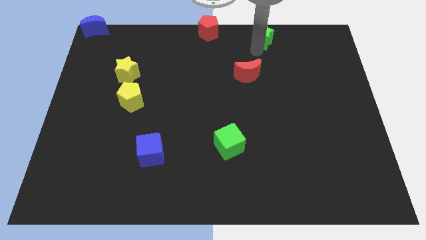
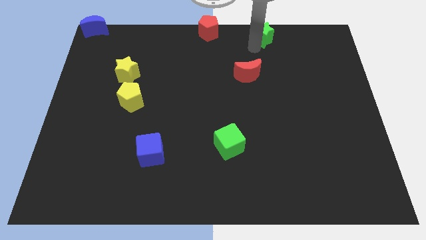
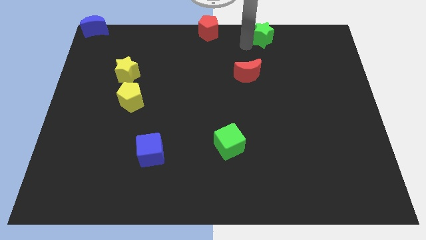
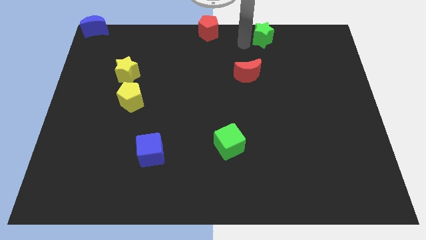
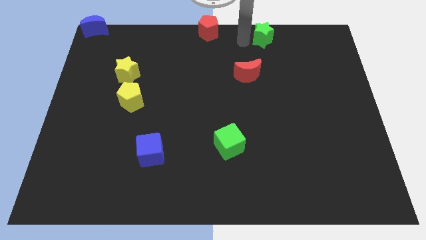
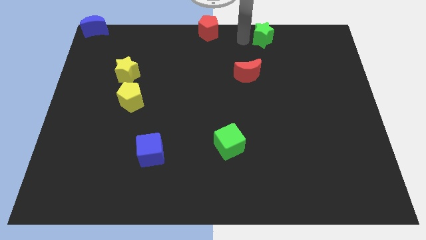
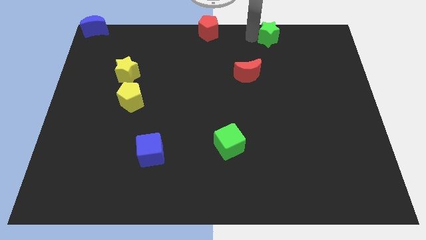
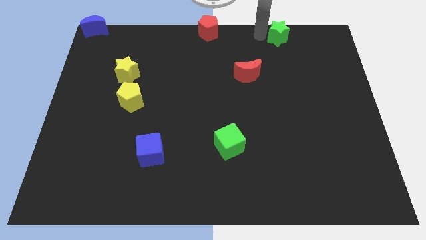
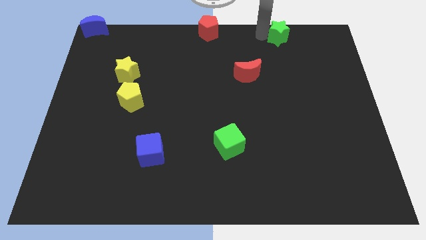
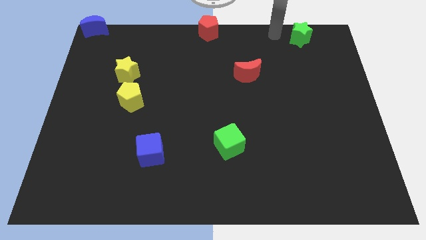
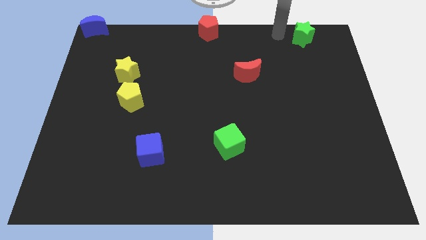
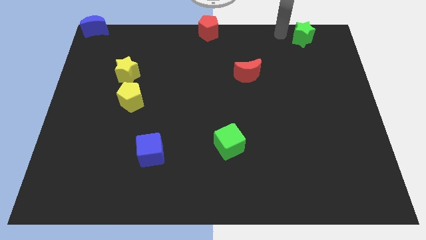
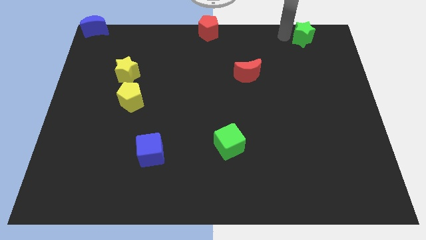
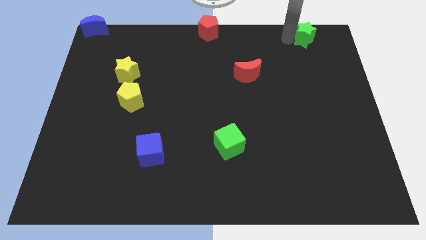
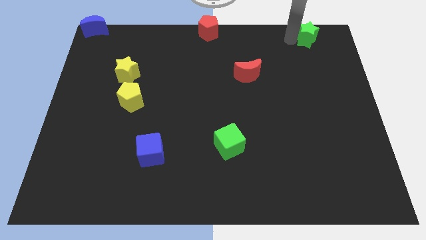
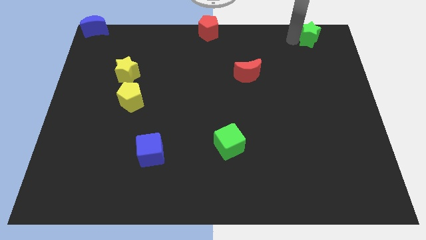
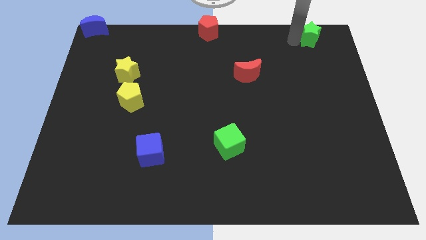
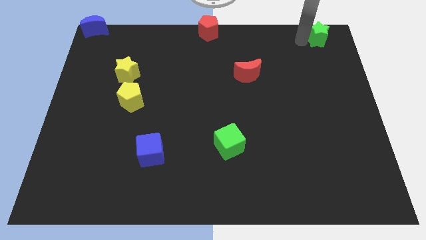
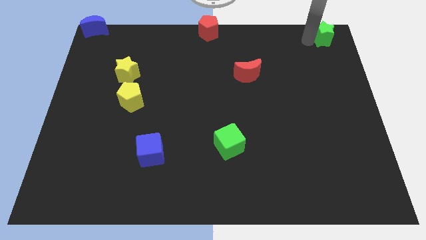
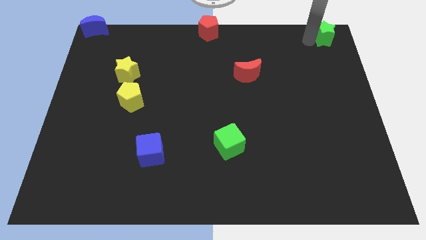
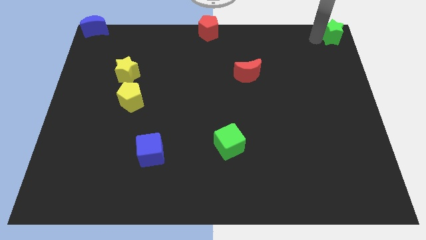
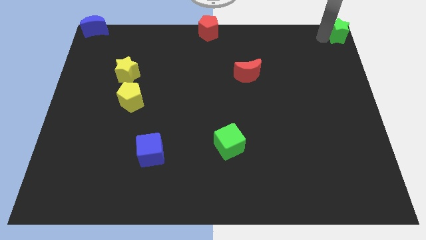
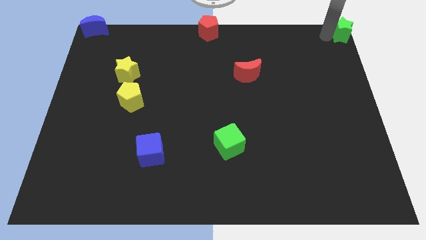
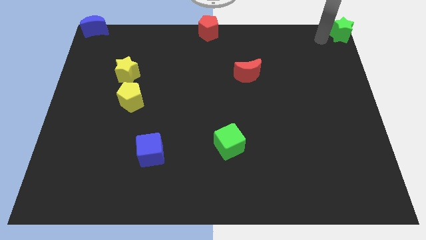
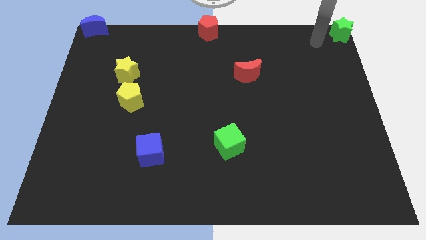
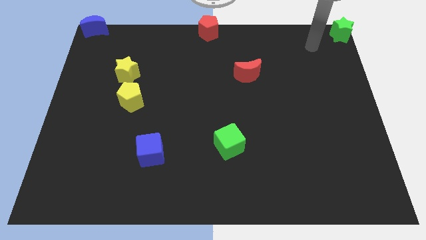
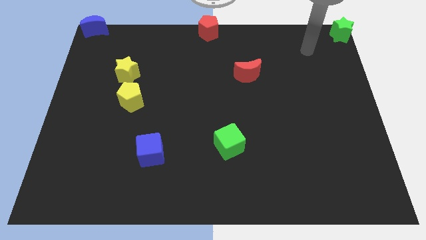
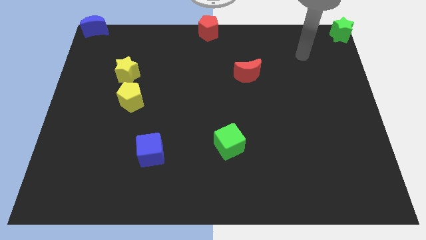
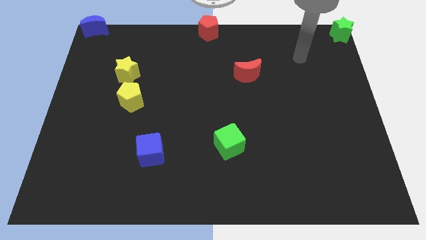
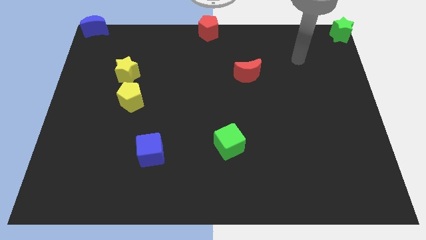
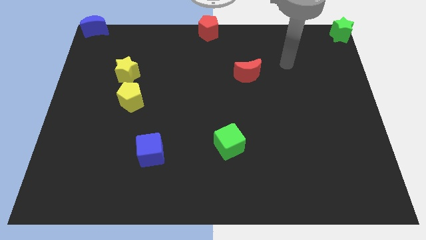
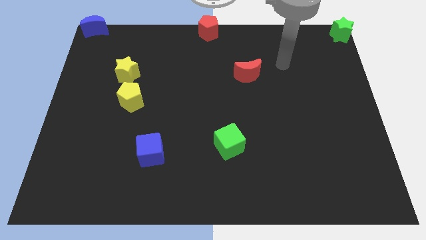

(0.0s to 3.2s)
push the green star to the top right corner of the board

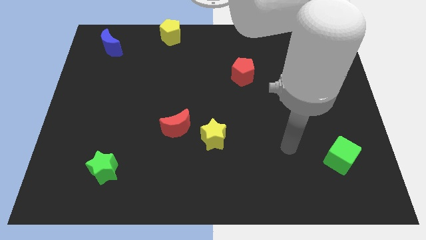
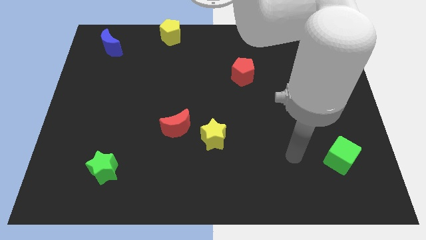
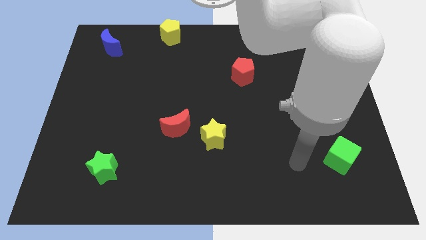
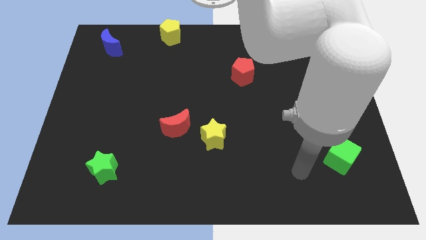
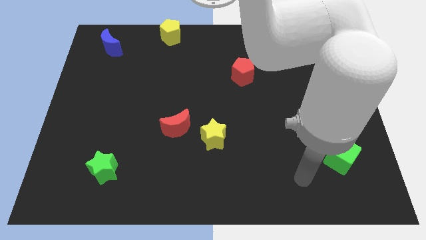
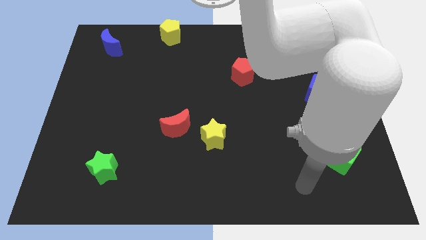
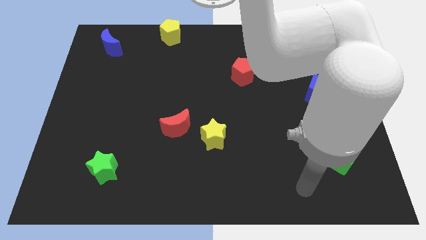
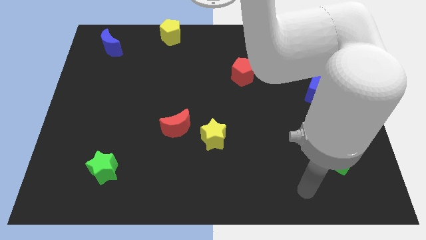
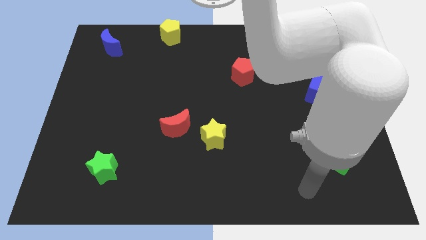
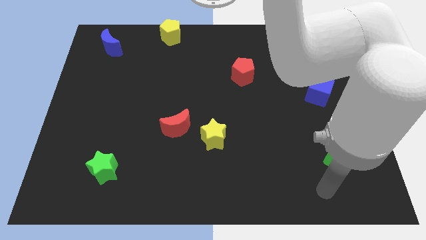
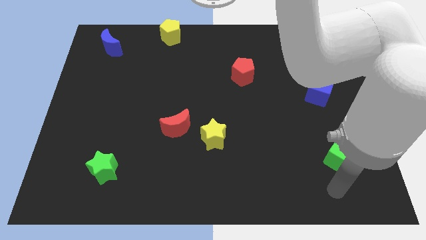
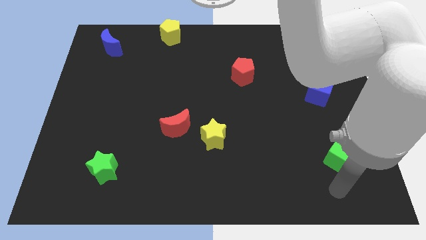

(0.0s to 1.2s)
move your hand to the bottom of the green cube

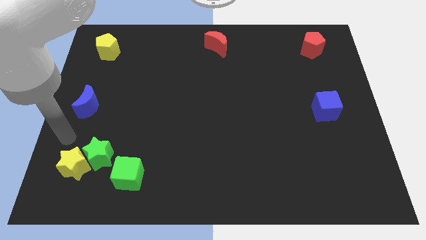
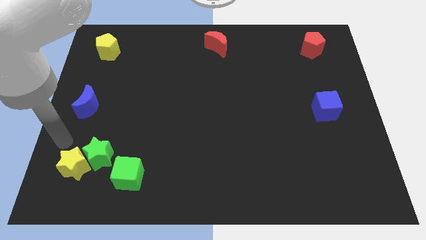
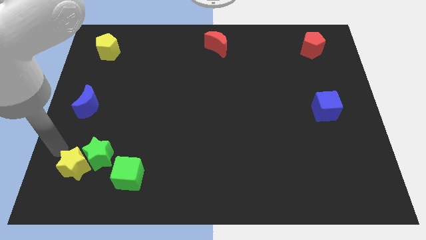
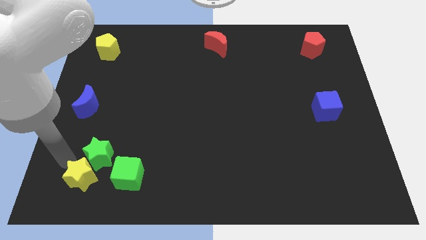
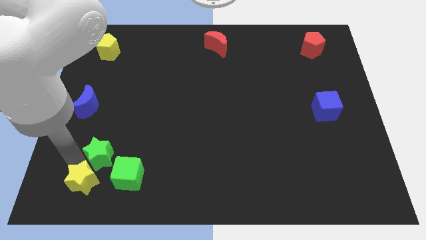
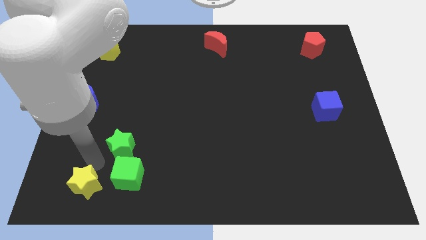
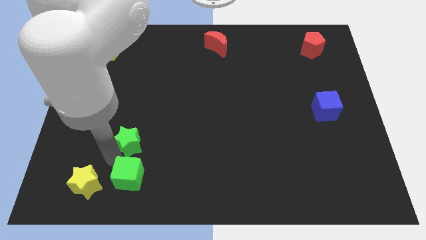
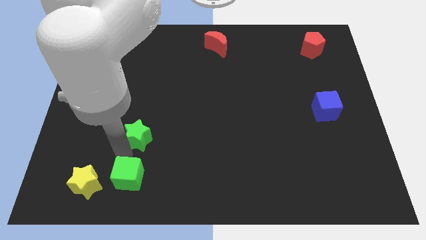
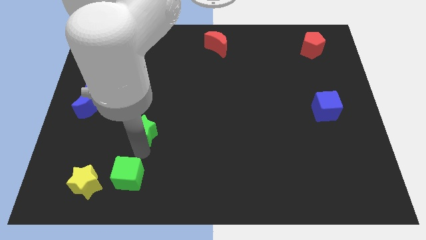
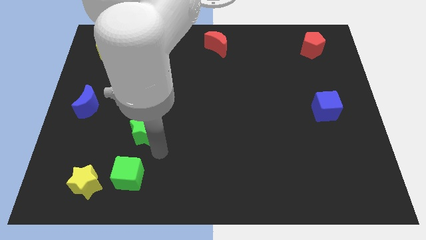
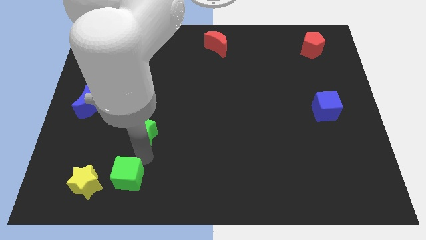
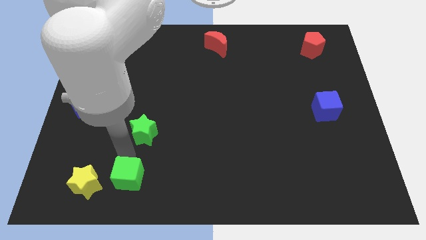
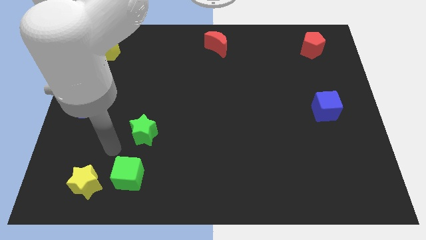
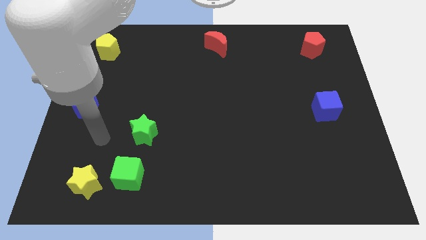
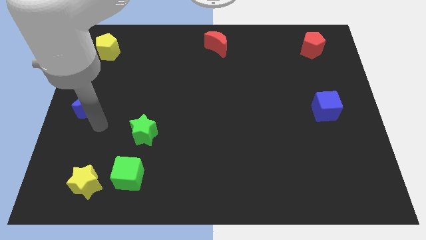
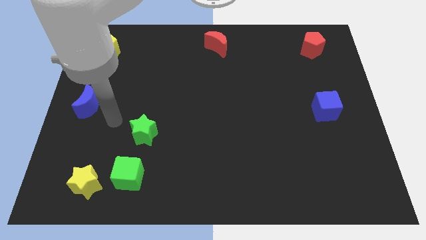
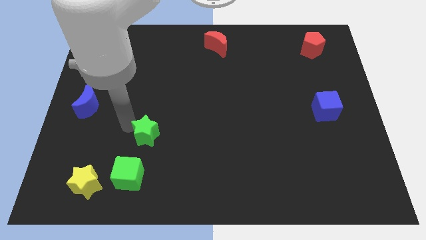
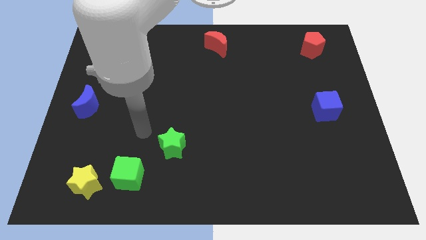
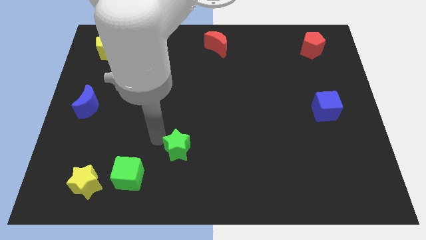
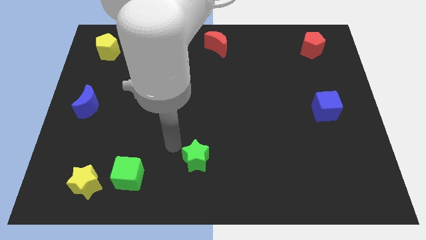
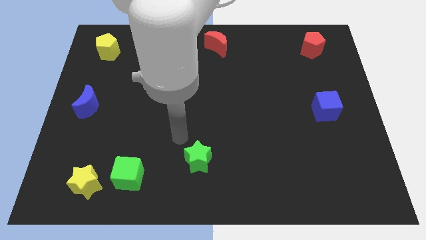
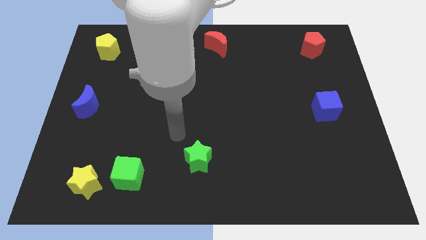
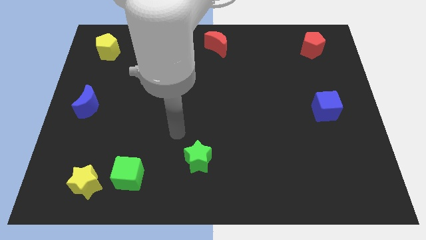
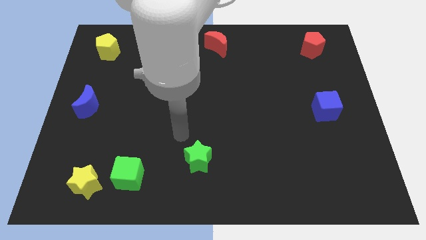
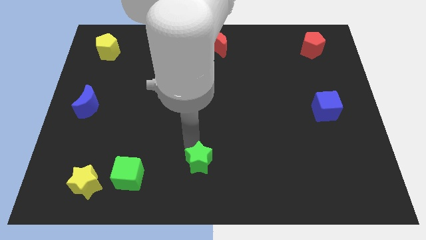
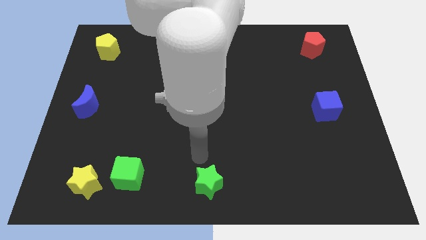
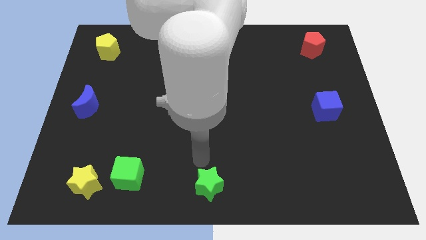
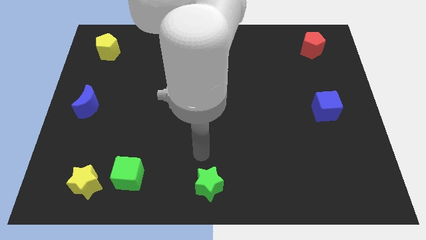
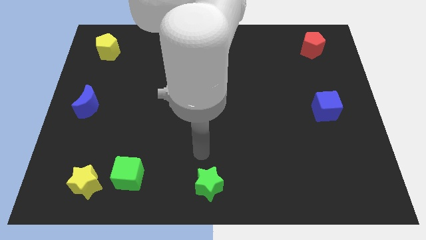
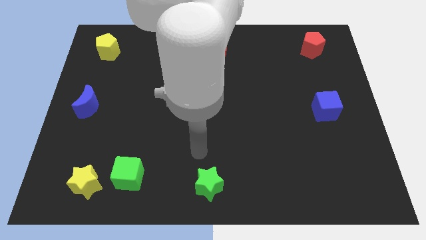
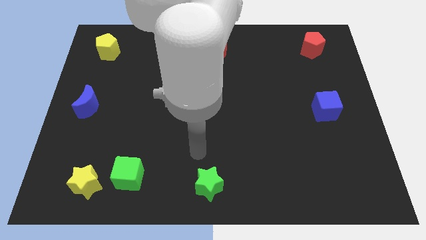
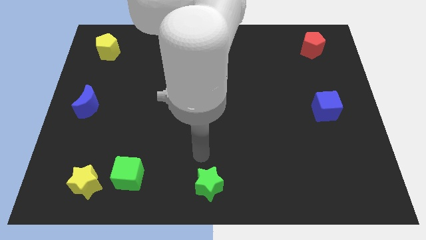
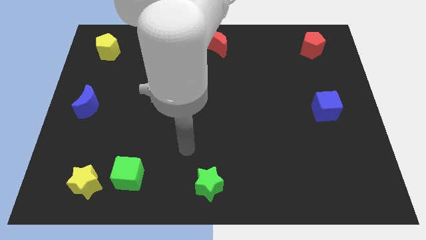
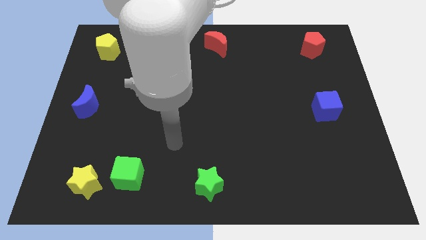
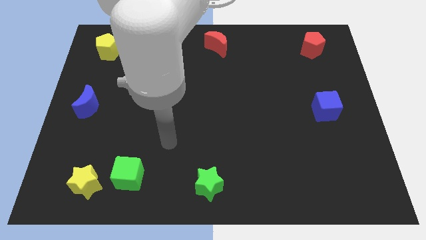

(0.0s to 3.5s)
move the green star to the bottom center

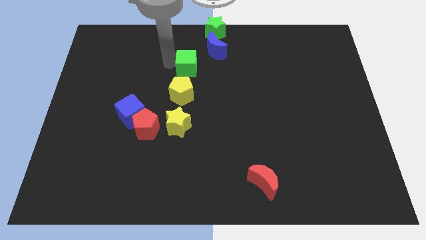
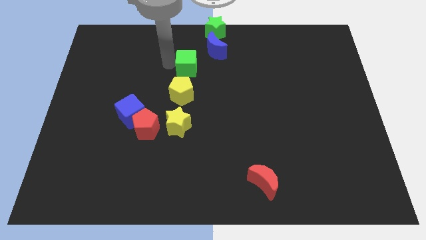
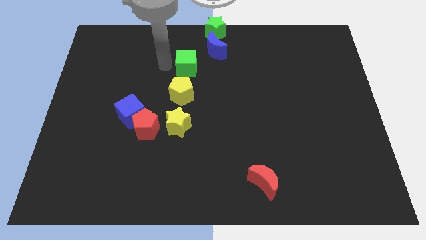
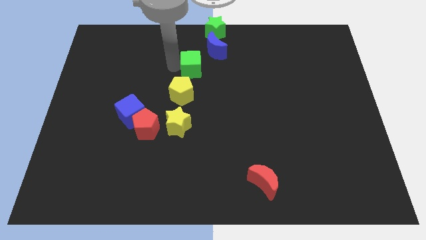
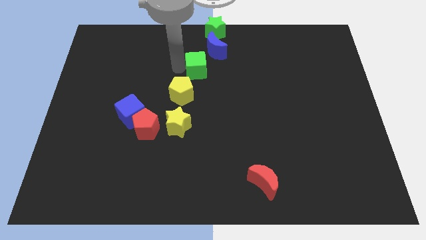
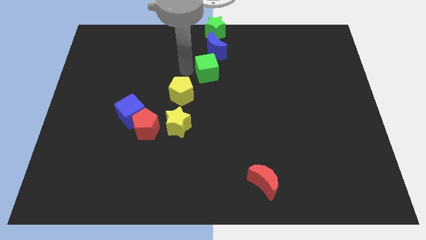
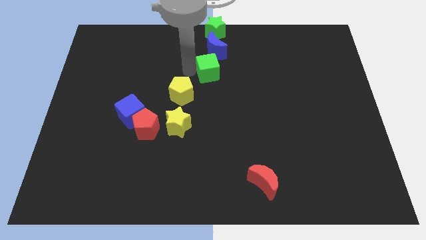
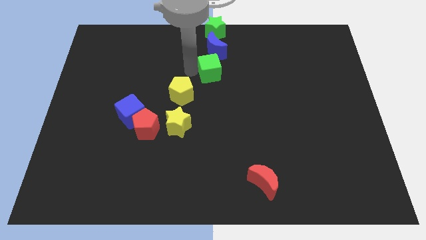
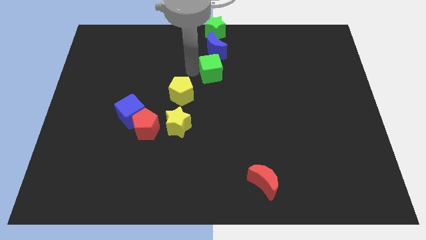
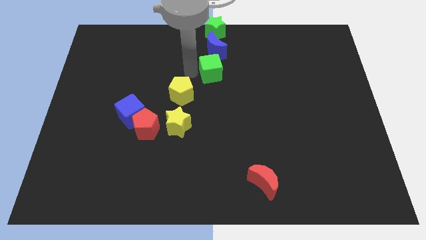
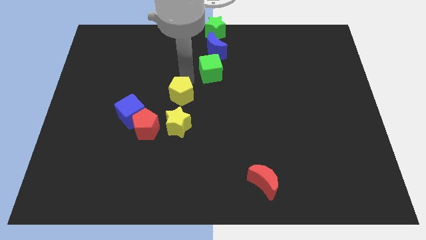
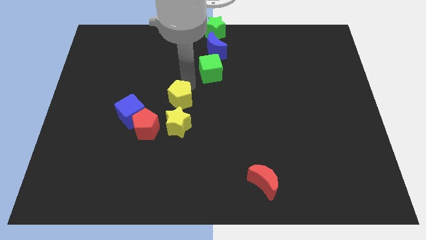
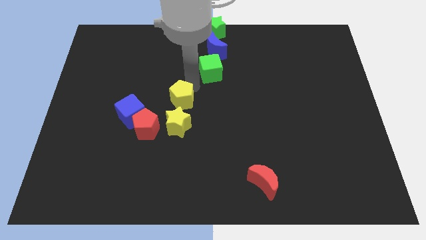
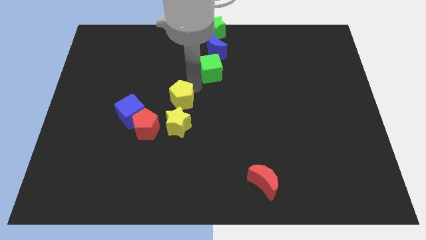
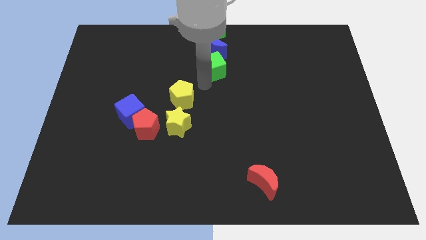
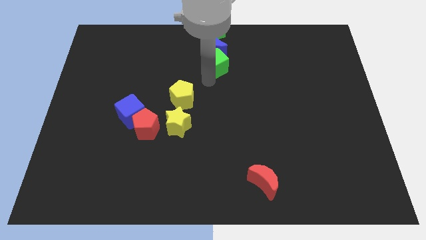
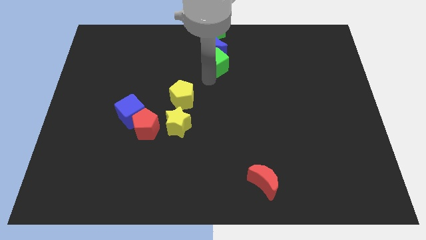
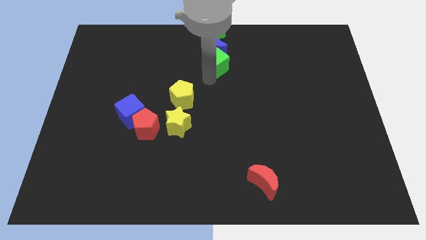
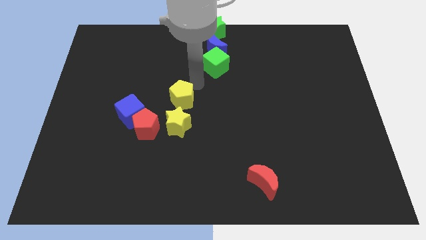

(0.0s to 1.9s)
slide the green cube into the blue moon
